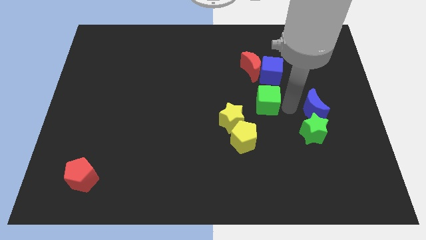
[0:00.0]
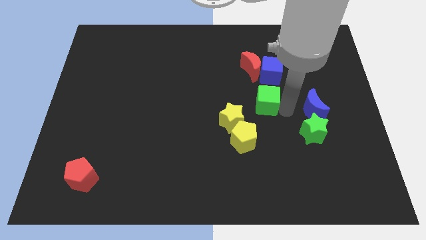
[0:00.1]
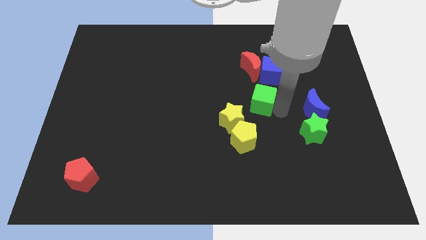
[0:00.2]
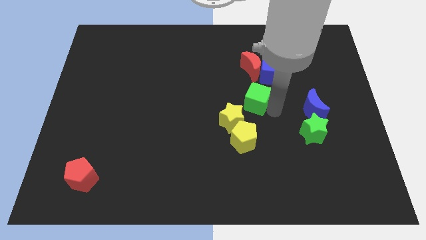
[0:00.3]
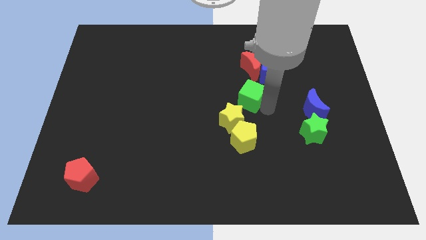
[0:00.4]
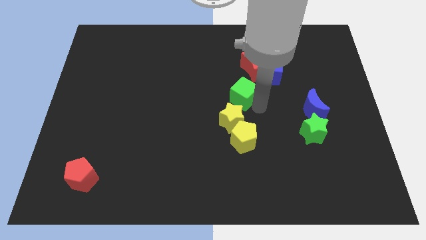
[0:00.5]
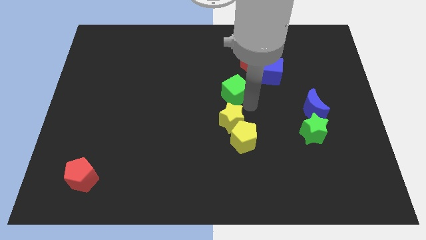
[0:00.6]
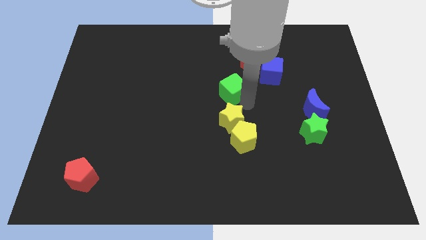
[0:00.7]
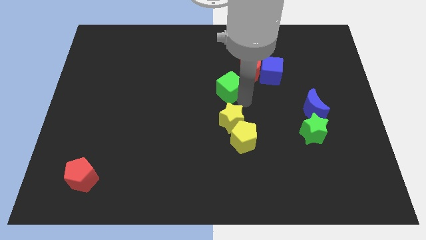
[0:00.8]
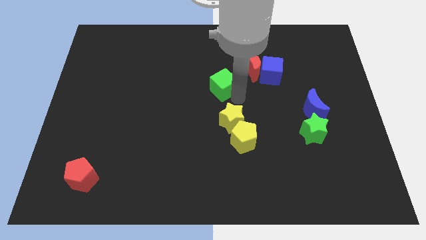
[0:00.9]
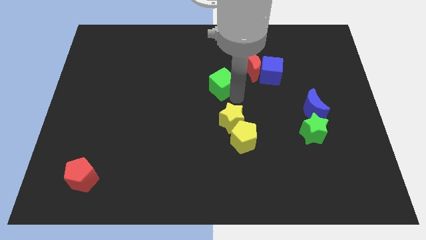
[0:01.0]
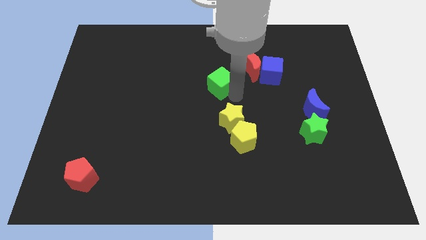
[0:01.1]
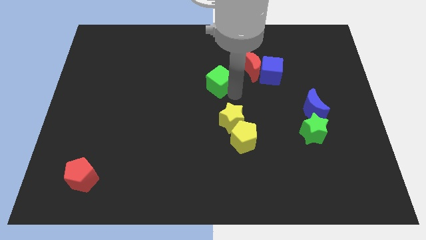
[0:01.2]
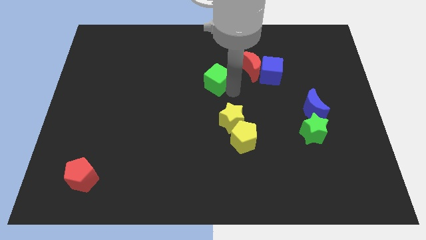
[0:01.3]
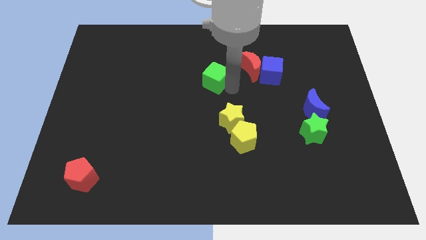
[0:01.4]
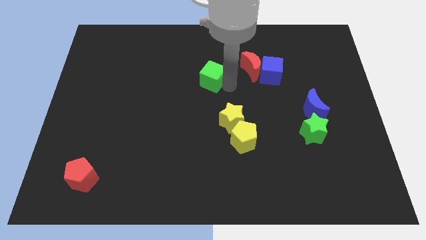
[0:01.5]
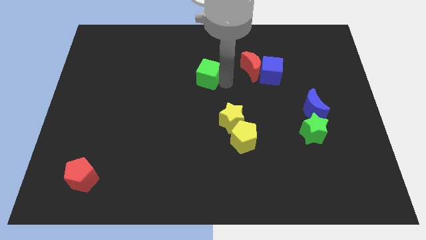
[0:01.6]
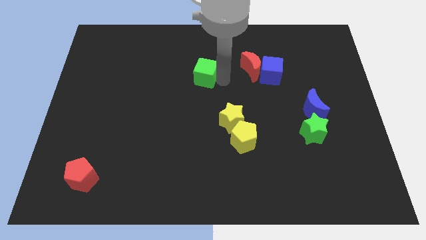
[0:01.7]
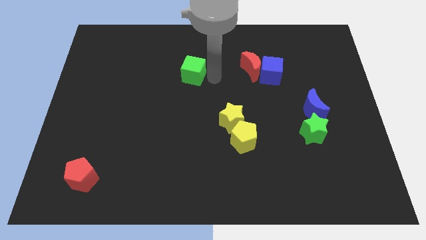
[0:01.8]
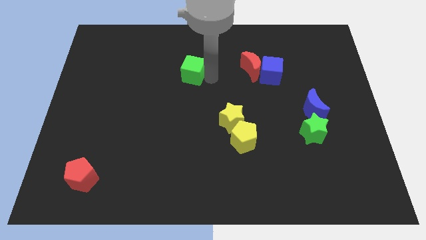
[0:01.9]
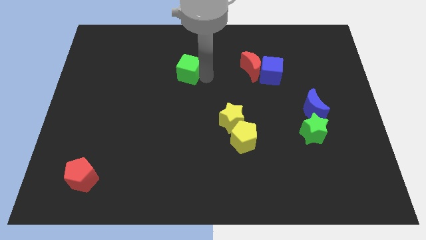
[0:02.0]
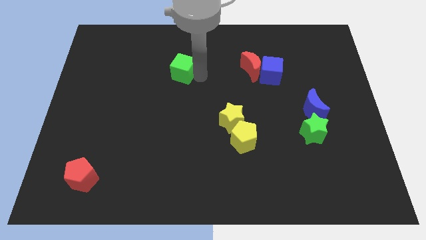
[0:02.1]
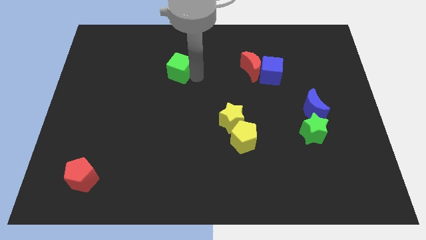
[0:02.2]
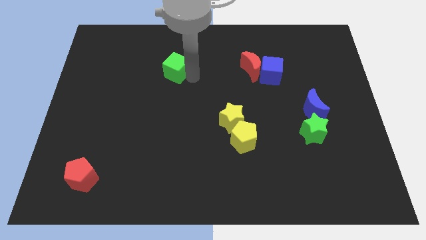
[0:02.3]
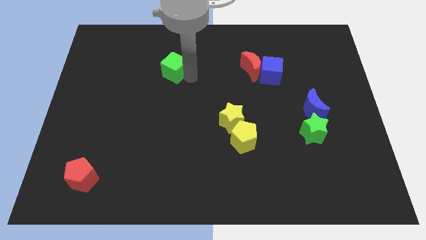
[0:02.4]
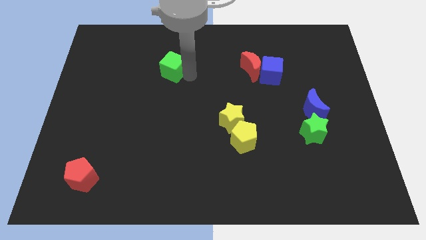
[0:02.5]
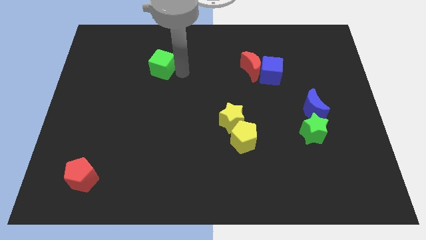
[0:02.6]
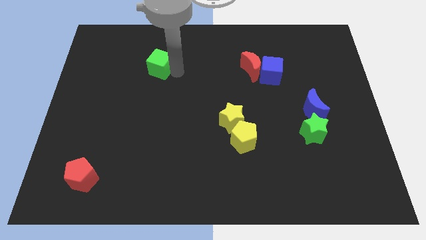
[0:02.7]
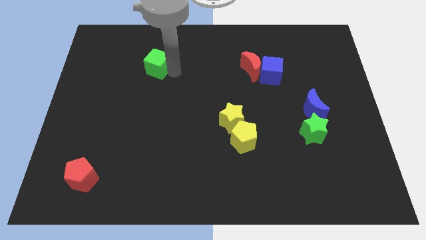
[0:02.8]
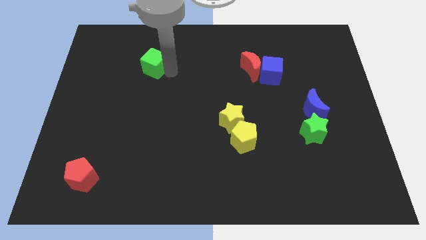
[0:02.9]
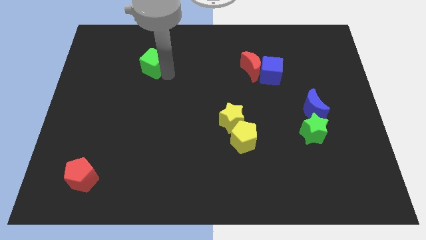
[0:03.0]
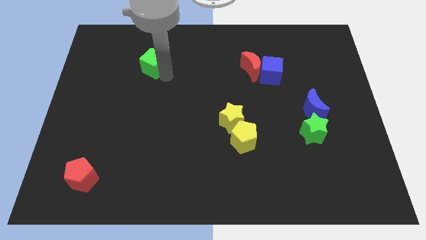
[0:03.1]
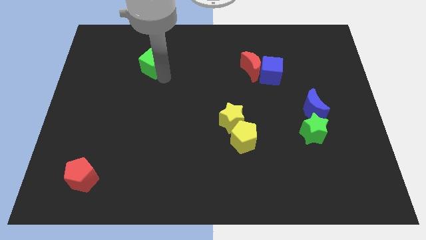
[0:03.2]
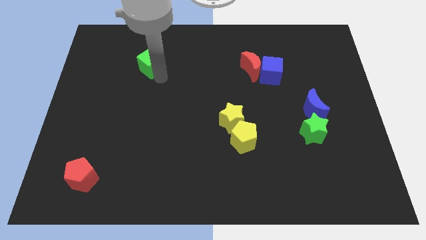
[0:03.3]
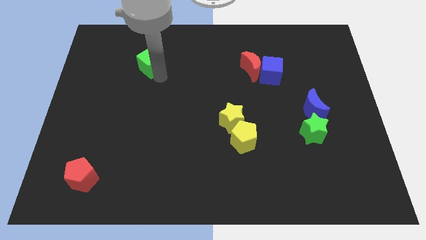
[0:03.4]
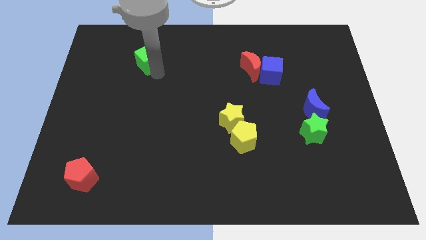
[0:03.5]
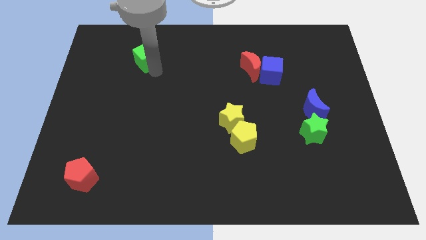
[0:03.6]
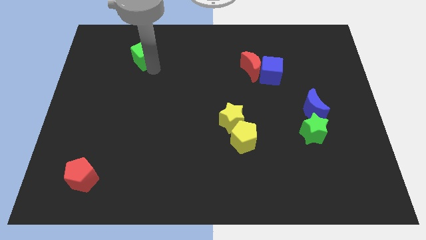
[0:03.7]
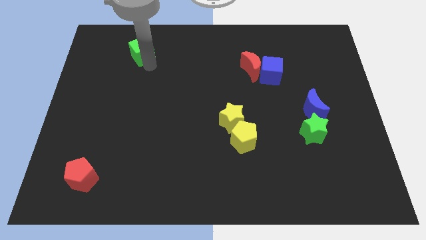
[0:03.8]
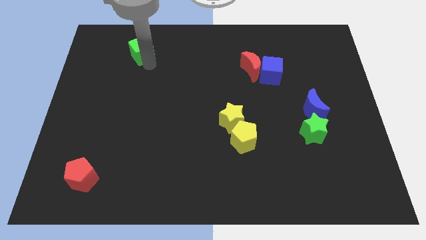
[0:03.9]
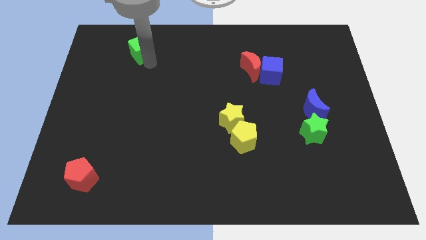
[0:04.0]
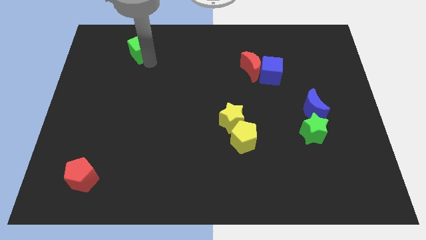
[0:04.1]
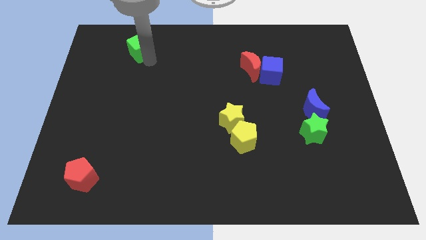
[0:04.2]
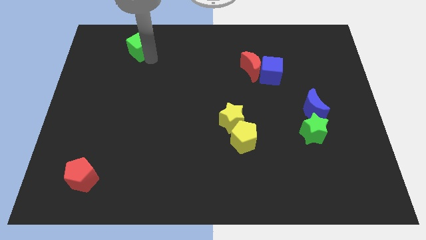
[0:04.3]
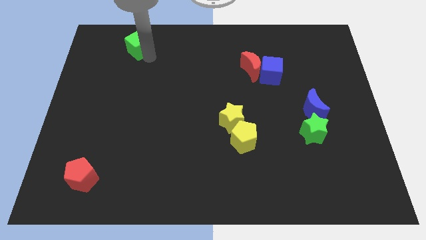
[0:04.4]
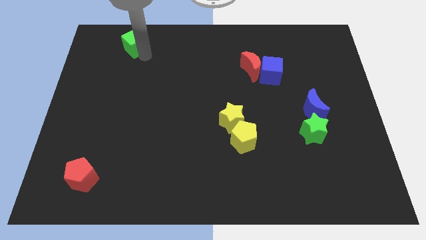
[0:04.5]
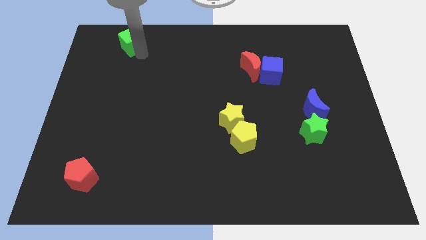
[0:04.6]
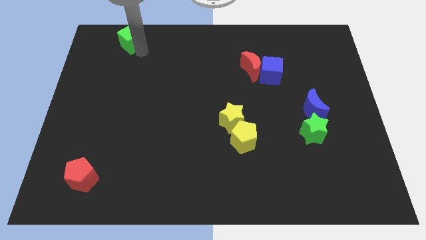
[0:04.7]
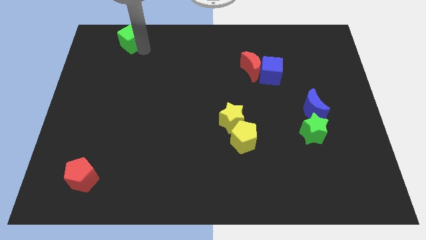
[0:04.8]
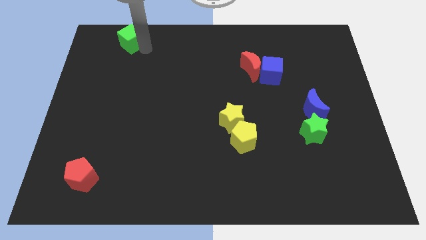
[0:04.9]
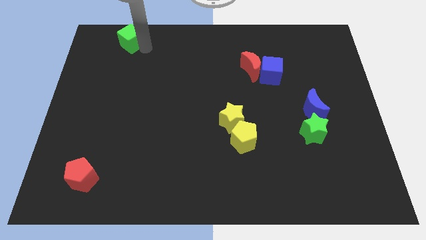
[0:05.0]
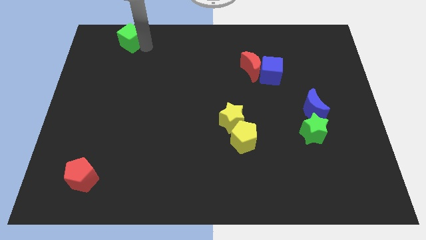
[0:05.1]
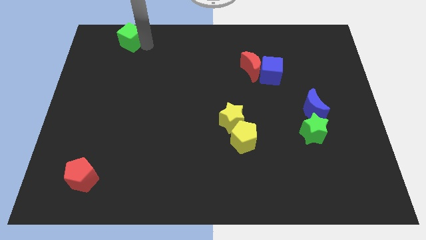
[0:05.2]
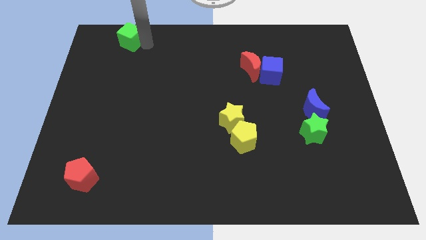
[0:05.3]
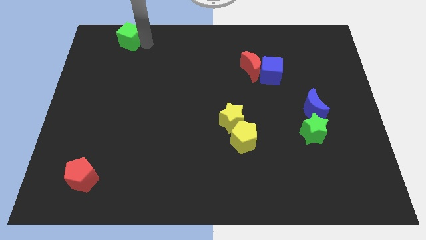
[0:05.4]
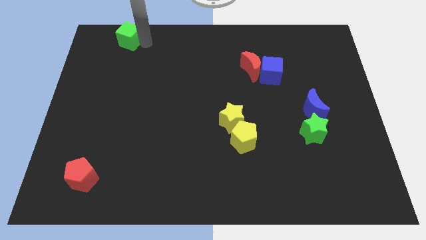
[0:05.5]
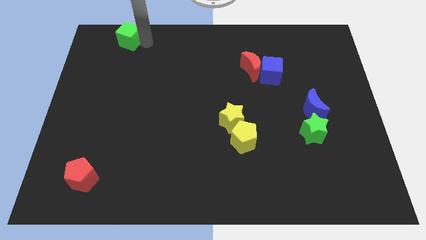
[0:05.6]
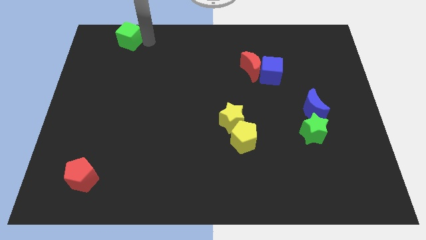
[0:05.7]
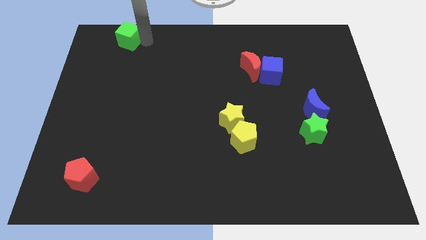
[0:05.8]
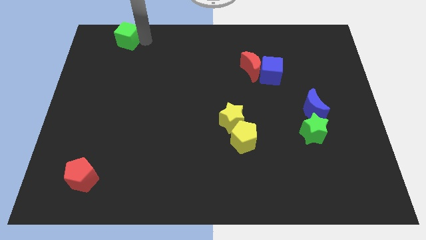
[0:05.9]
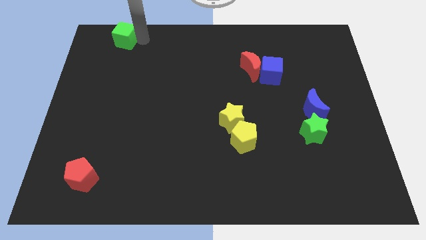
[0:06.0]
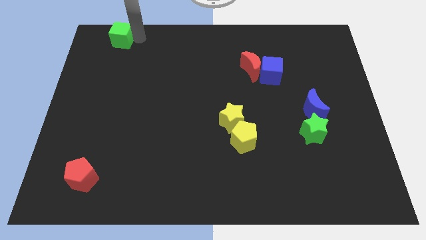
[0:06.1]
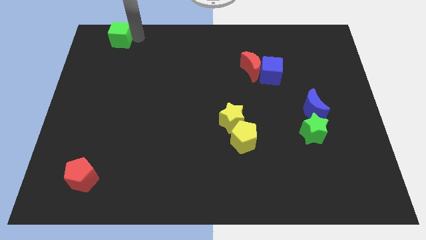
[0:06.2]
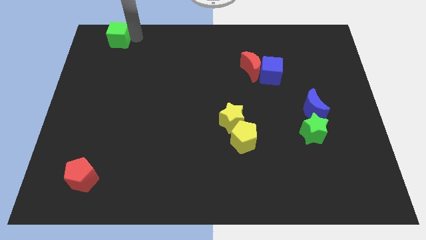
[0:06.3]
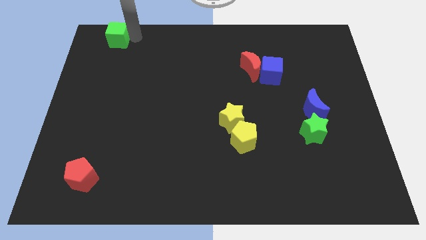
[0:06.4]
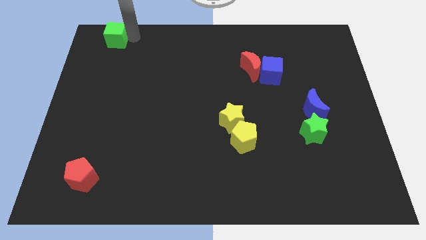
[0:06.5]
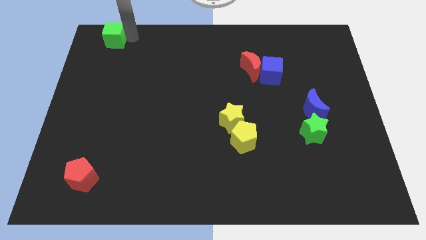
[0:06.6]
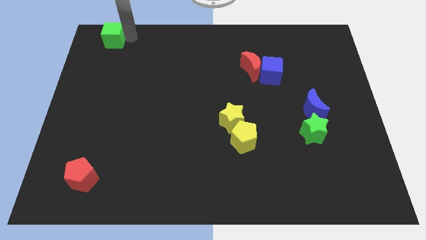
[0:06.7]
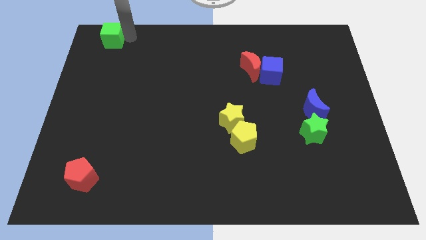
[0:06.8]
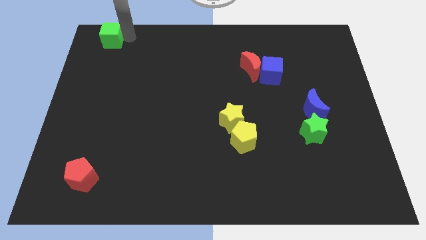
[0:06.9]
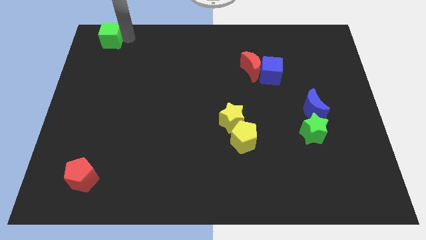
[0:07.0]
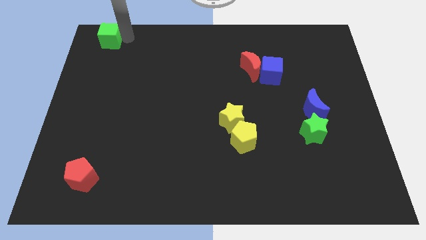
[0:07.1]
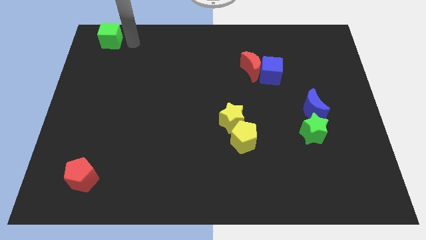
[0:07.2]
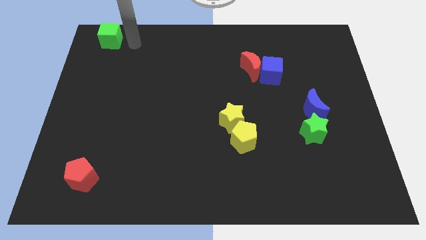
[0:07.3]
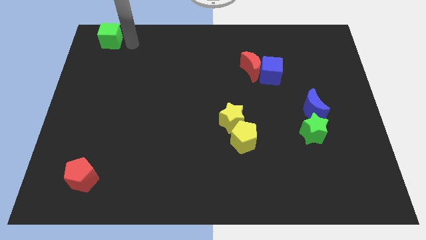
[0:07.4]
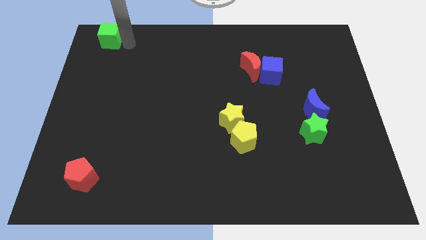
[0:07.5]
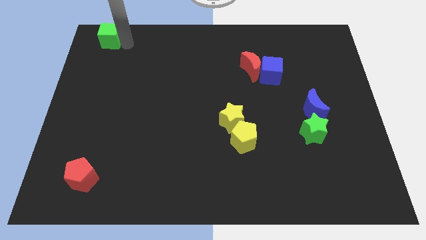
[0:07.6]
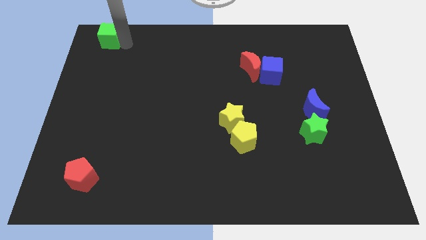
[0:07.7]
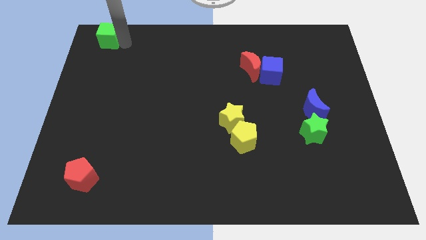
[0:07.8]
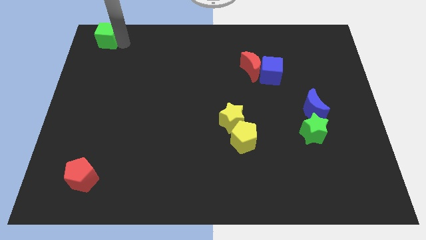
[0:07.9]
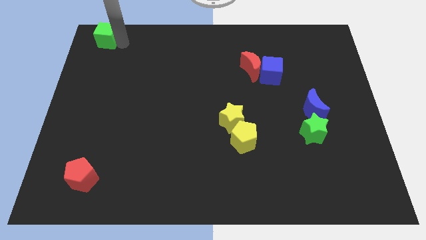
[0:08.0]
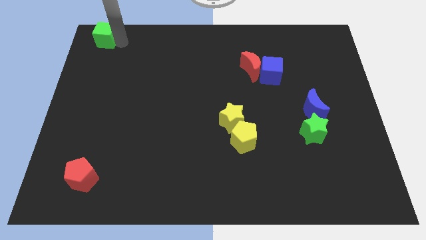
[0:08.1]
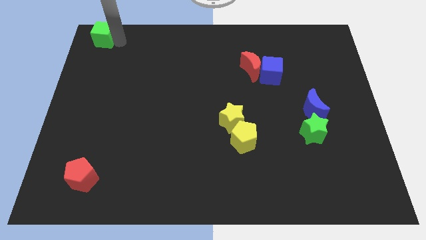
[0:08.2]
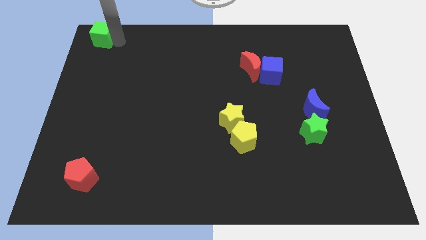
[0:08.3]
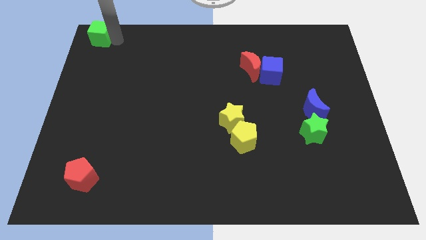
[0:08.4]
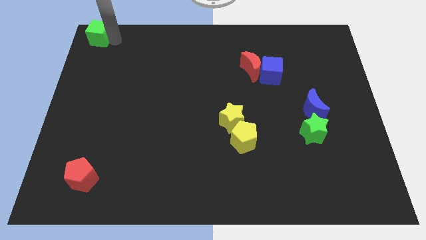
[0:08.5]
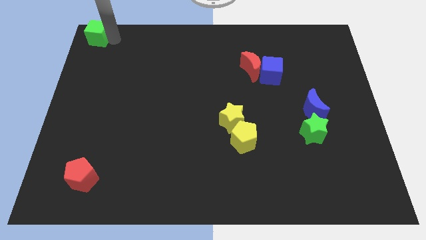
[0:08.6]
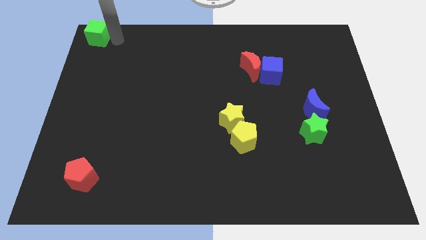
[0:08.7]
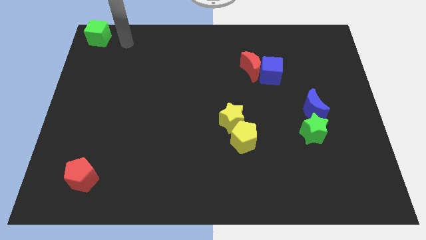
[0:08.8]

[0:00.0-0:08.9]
move the green cube to the top left corner of the board

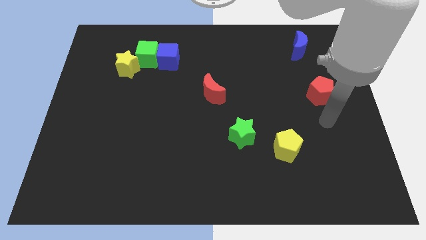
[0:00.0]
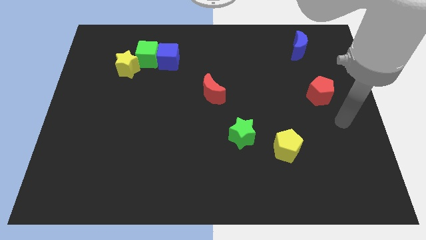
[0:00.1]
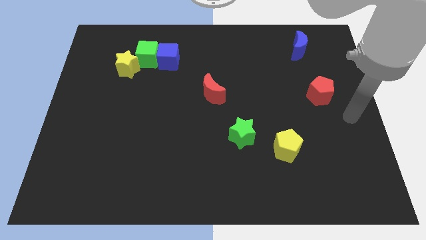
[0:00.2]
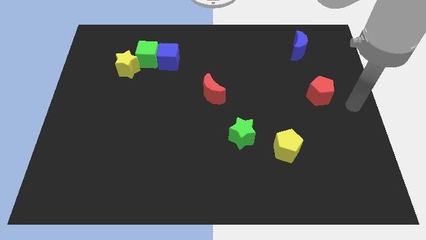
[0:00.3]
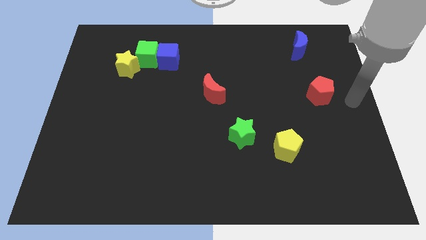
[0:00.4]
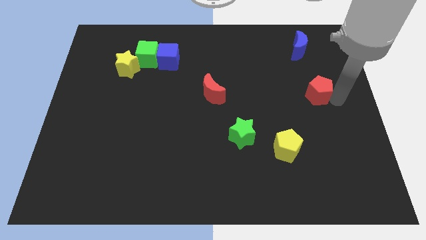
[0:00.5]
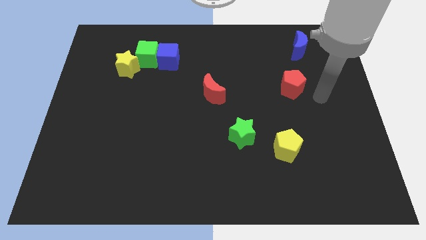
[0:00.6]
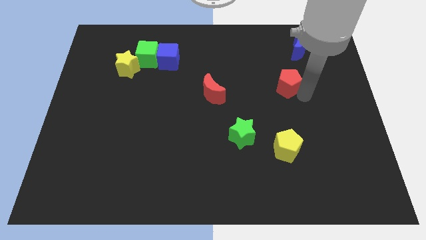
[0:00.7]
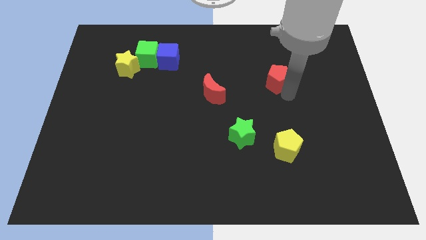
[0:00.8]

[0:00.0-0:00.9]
move red pentagon slightly left
